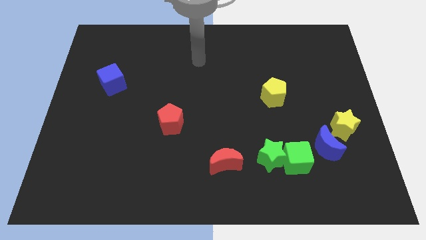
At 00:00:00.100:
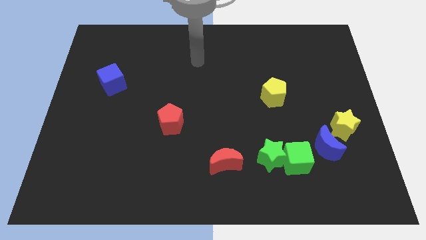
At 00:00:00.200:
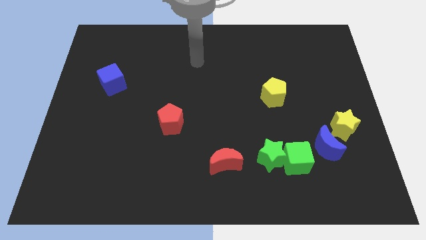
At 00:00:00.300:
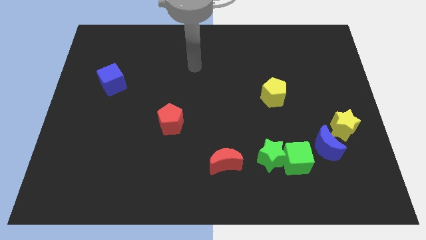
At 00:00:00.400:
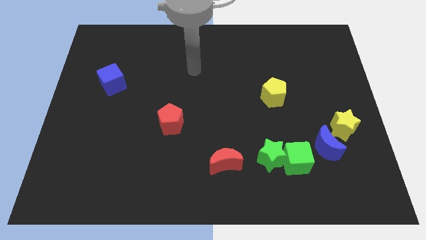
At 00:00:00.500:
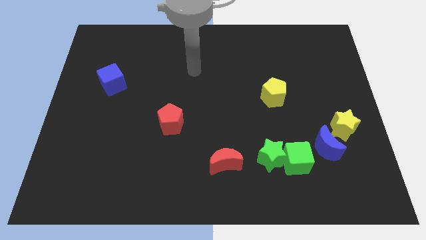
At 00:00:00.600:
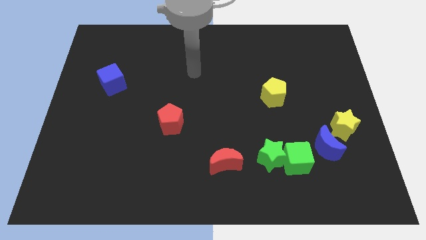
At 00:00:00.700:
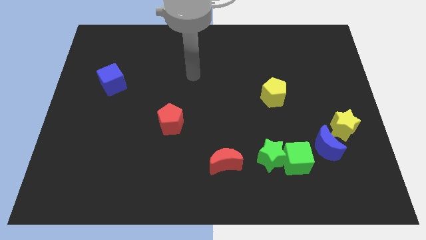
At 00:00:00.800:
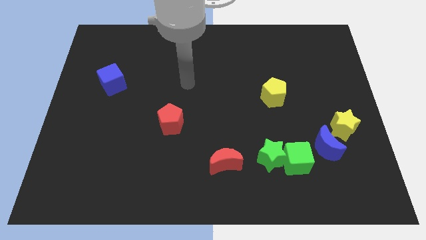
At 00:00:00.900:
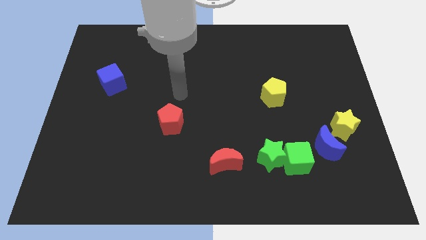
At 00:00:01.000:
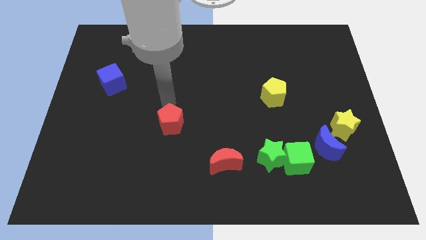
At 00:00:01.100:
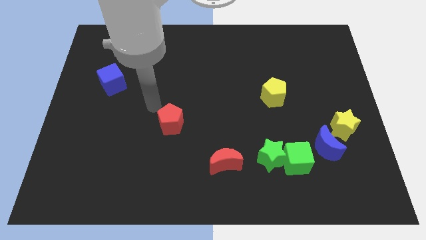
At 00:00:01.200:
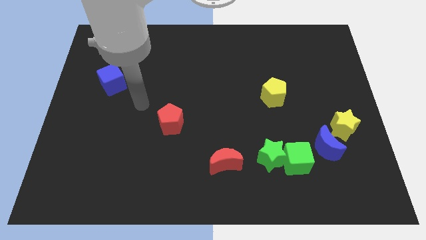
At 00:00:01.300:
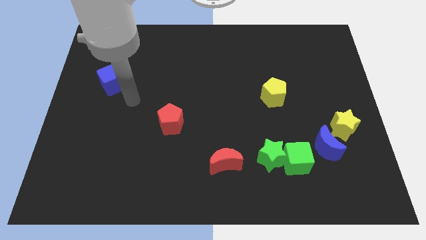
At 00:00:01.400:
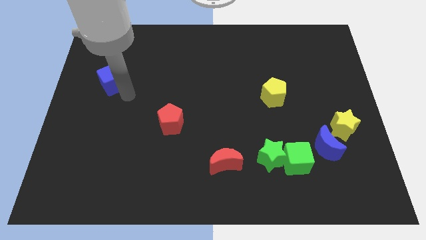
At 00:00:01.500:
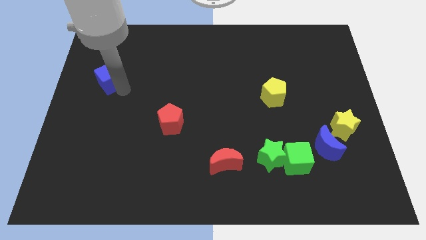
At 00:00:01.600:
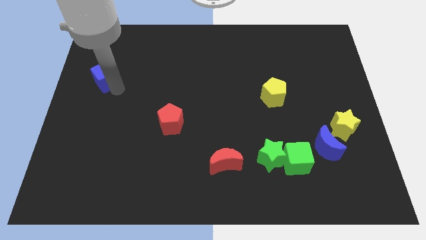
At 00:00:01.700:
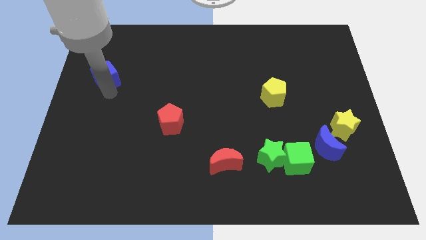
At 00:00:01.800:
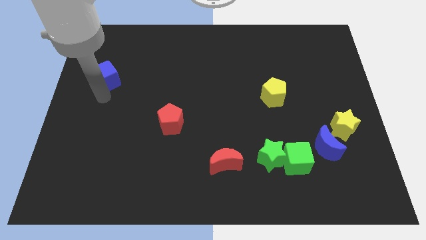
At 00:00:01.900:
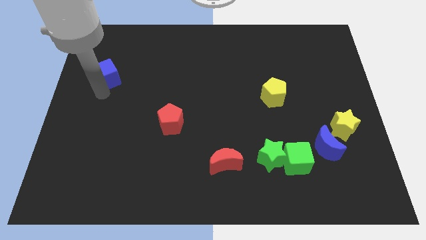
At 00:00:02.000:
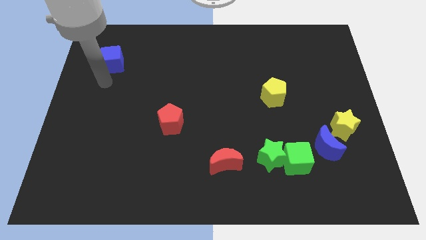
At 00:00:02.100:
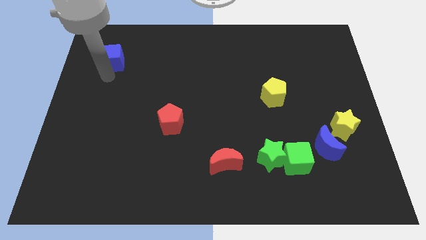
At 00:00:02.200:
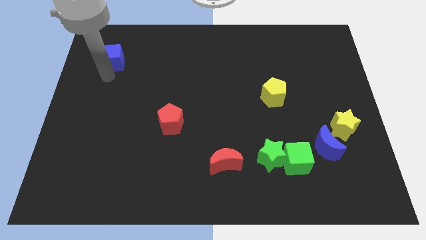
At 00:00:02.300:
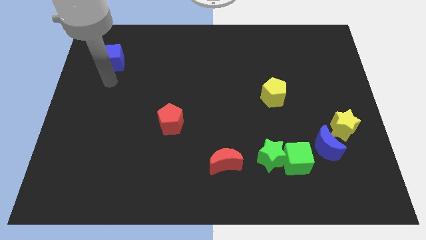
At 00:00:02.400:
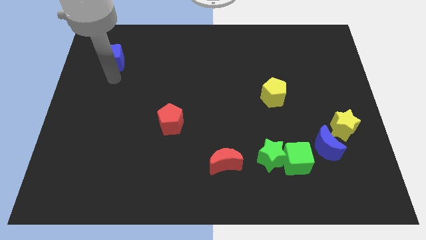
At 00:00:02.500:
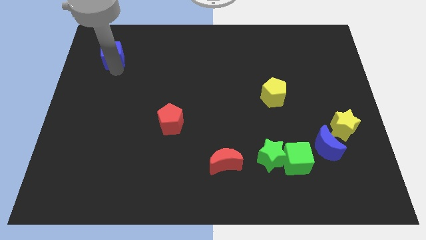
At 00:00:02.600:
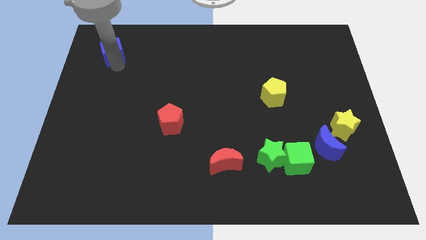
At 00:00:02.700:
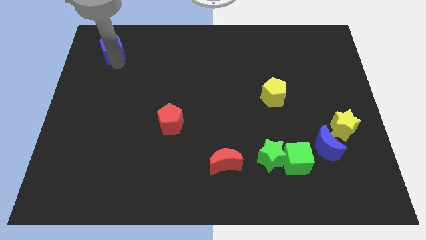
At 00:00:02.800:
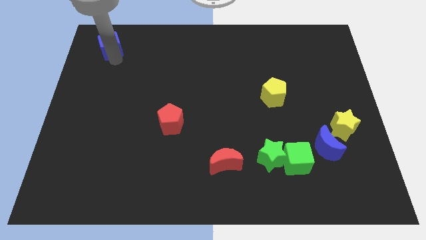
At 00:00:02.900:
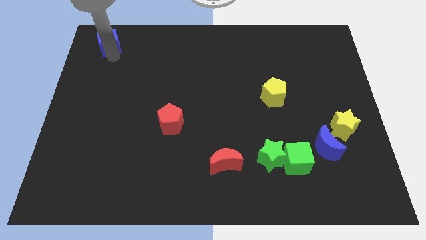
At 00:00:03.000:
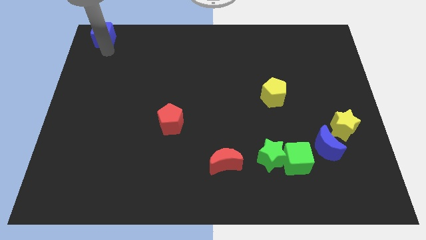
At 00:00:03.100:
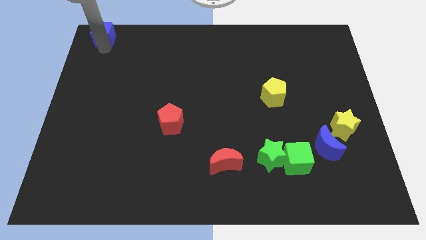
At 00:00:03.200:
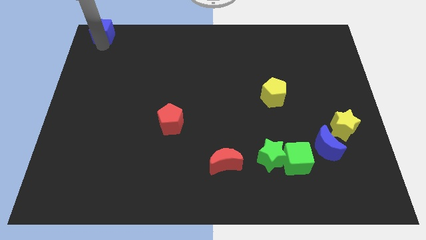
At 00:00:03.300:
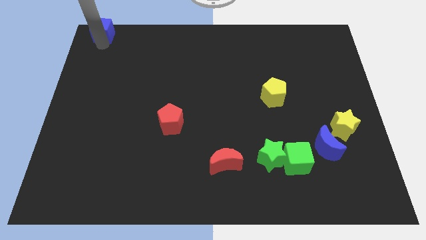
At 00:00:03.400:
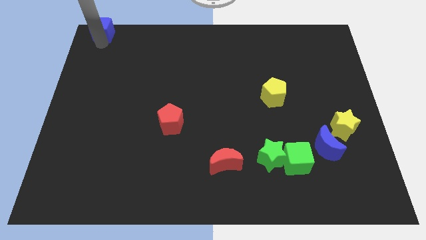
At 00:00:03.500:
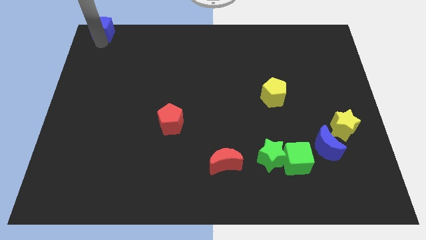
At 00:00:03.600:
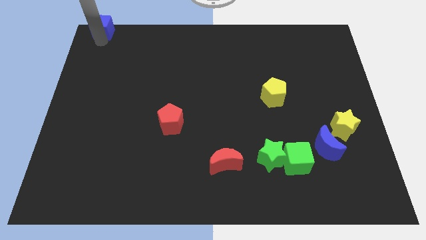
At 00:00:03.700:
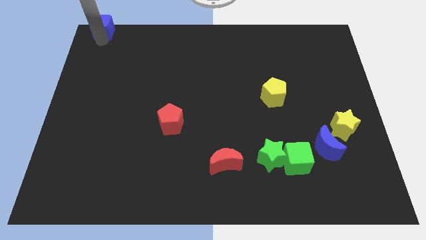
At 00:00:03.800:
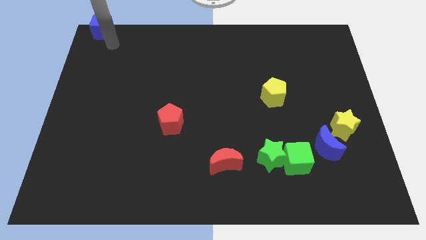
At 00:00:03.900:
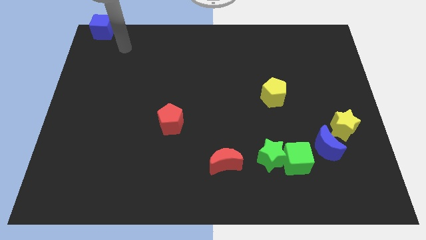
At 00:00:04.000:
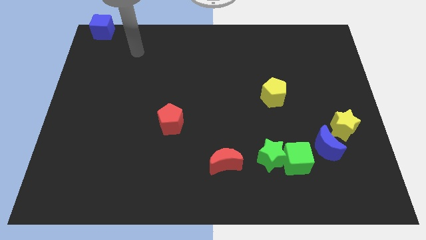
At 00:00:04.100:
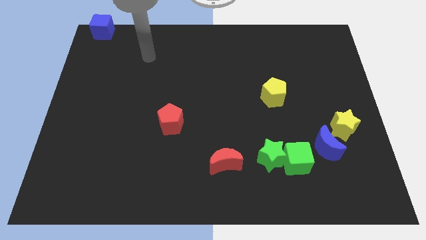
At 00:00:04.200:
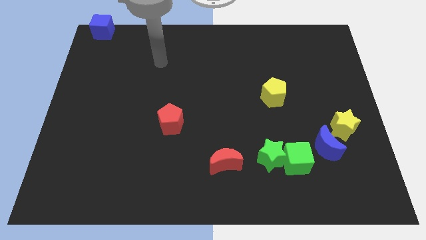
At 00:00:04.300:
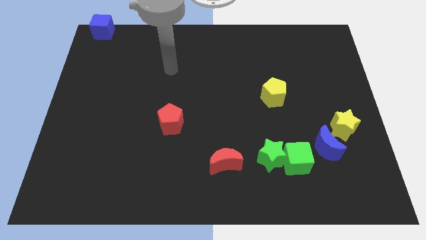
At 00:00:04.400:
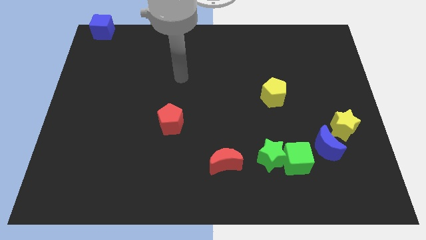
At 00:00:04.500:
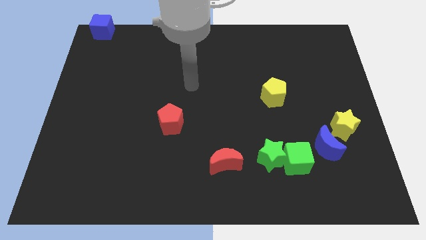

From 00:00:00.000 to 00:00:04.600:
move the blue cube to the top left corner of the board

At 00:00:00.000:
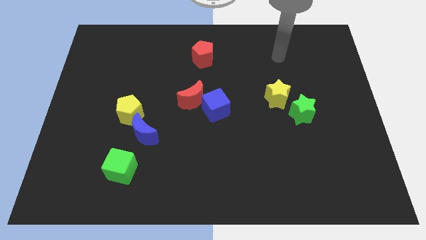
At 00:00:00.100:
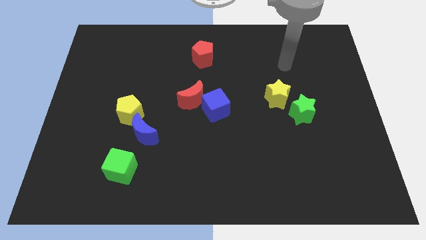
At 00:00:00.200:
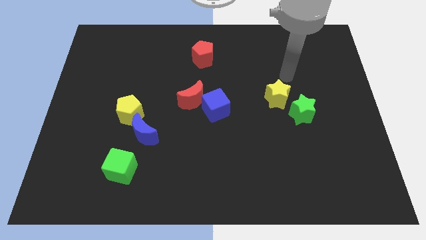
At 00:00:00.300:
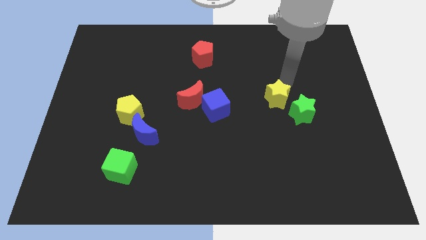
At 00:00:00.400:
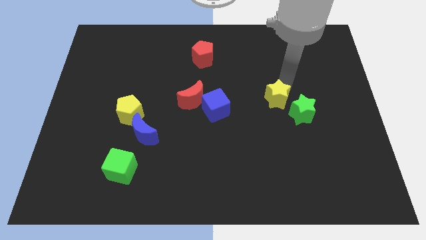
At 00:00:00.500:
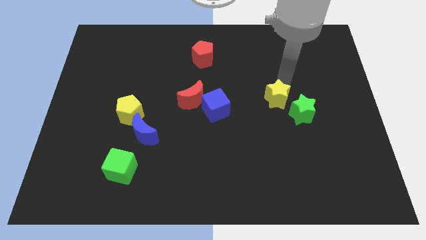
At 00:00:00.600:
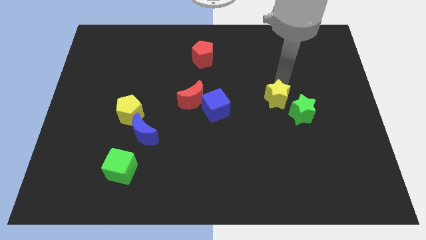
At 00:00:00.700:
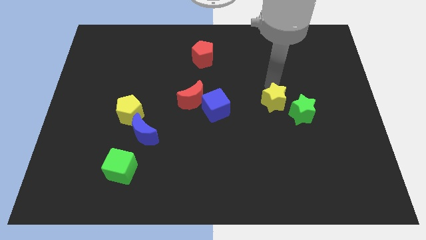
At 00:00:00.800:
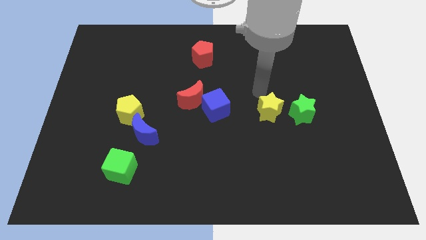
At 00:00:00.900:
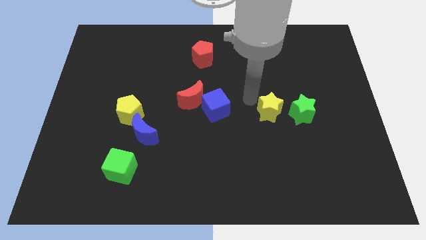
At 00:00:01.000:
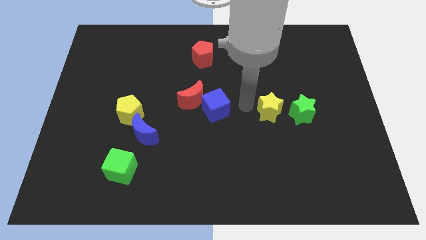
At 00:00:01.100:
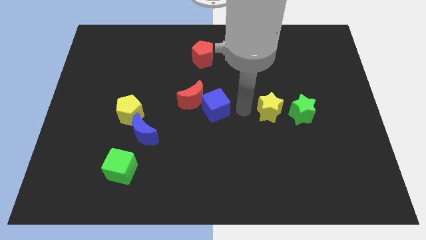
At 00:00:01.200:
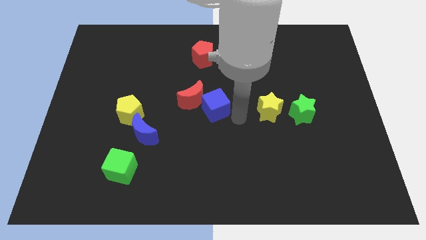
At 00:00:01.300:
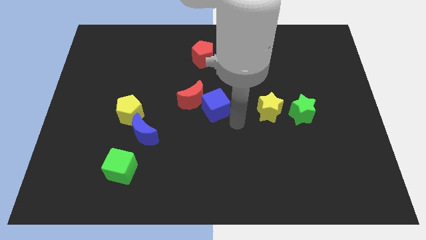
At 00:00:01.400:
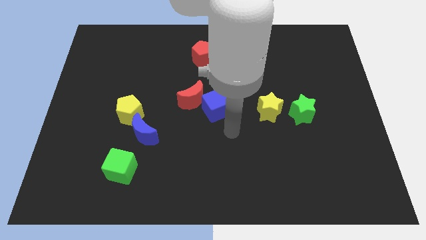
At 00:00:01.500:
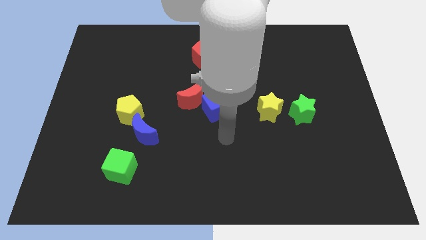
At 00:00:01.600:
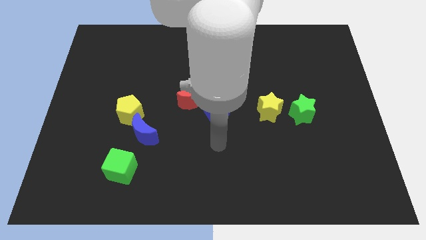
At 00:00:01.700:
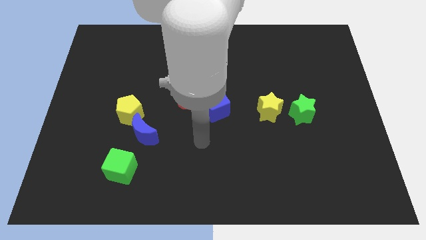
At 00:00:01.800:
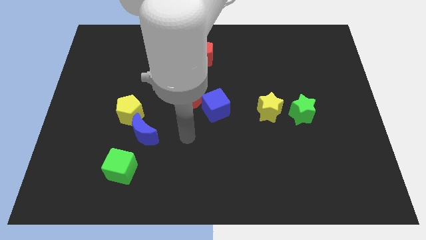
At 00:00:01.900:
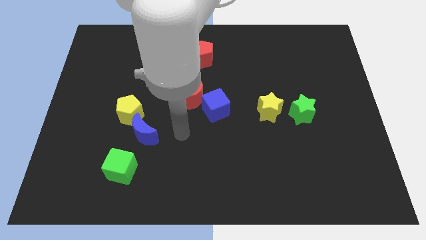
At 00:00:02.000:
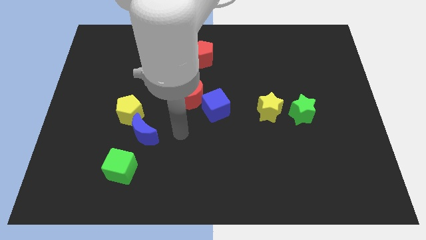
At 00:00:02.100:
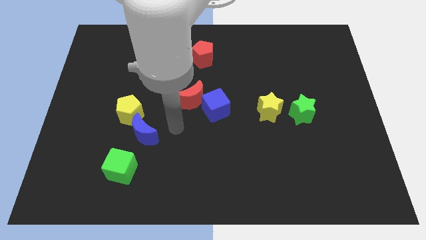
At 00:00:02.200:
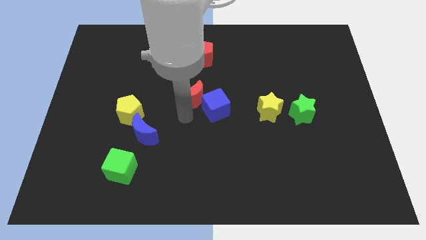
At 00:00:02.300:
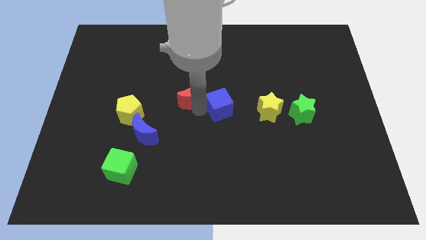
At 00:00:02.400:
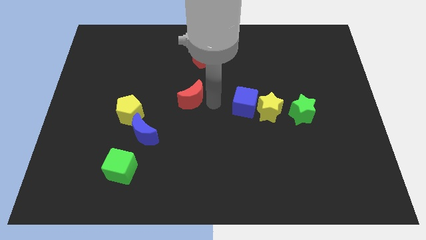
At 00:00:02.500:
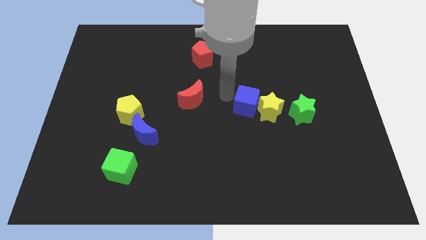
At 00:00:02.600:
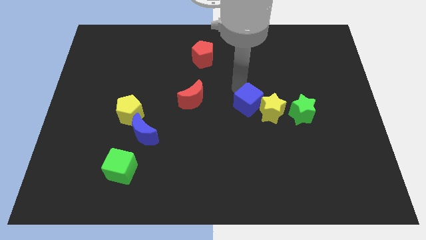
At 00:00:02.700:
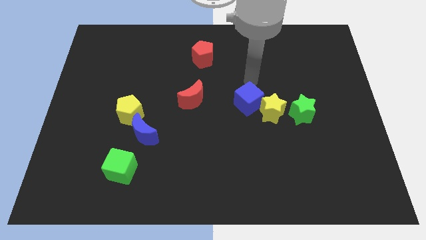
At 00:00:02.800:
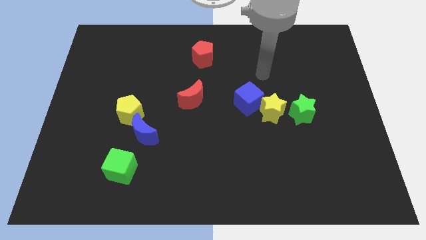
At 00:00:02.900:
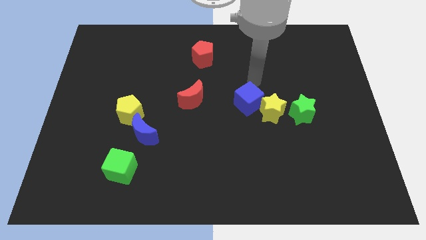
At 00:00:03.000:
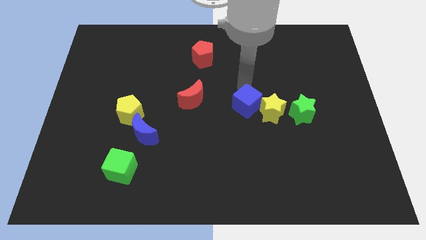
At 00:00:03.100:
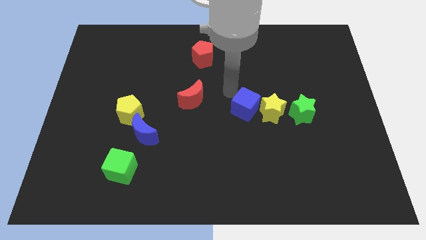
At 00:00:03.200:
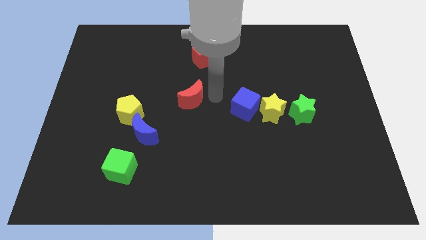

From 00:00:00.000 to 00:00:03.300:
move the blue cube to the left of the yellow star

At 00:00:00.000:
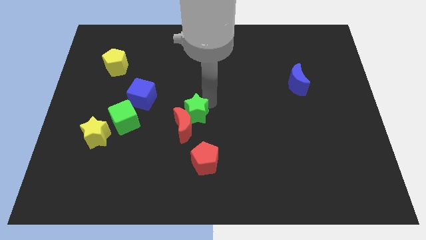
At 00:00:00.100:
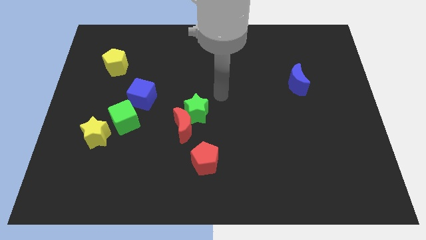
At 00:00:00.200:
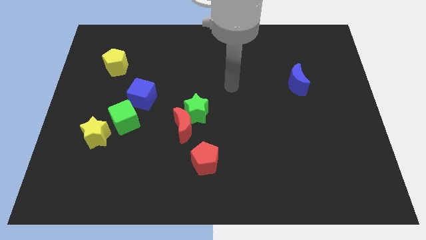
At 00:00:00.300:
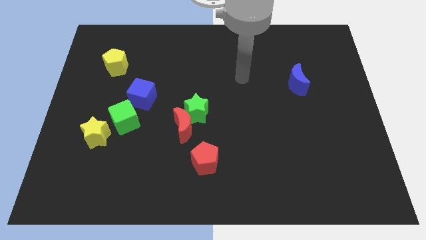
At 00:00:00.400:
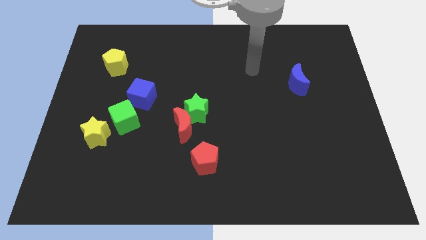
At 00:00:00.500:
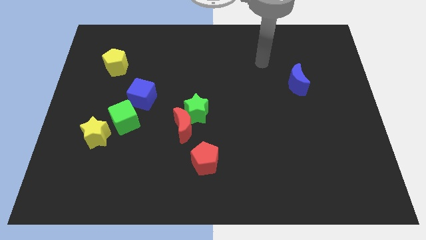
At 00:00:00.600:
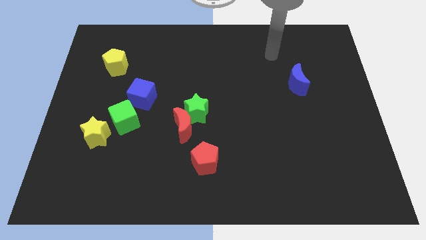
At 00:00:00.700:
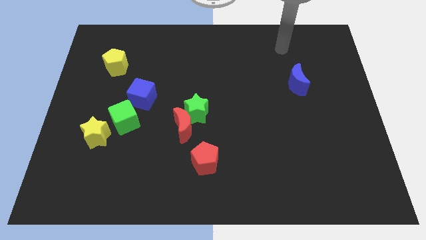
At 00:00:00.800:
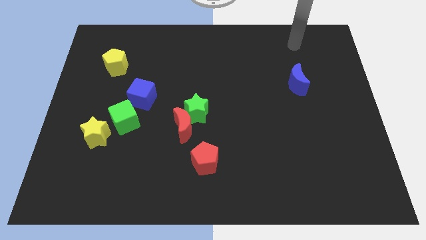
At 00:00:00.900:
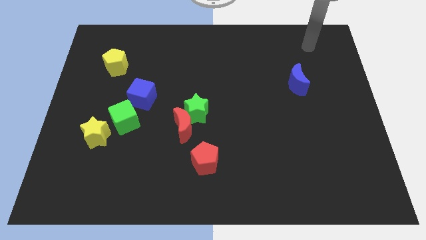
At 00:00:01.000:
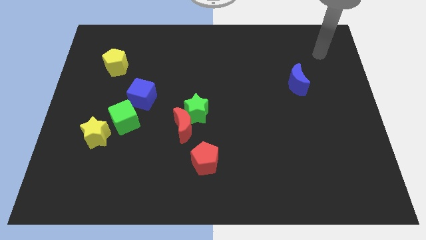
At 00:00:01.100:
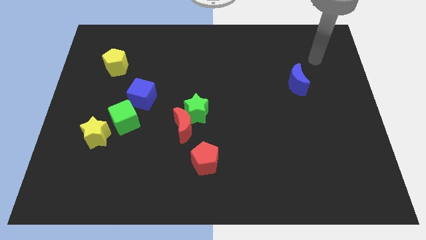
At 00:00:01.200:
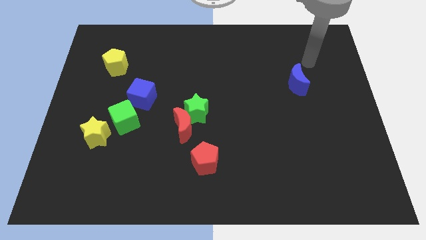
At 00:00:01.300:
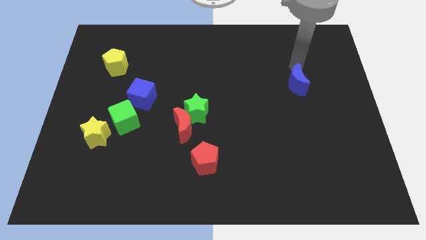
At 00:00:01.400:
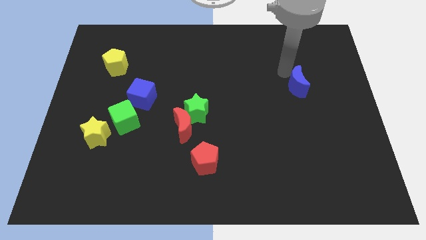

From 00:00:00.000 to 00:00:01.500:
point your arm at the top side of the blue crescent
